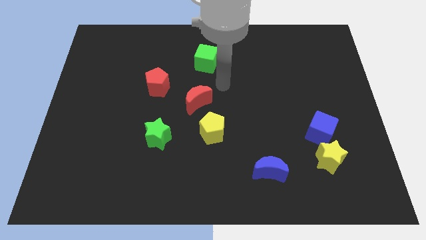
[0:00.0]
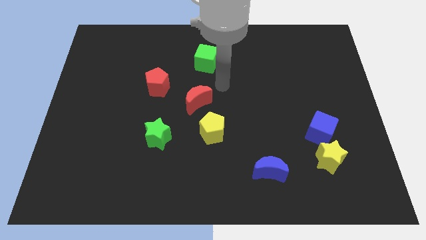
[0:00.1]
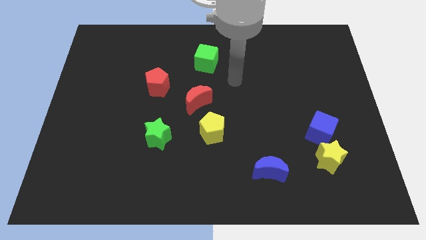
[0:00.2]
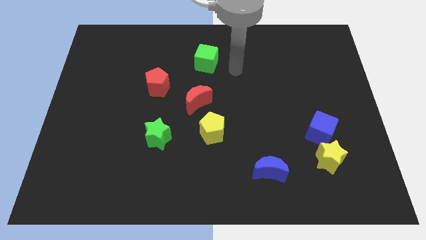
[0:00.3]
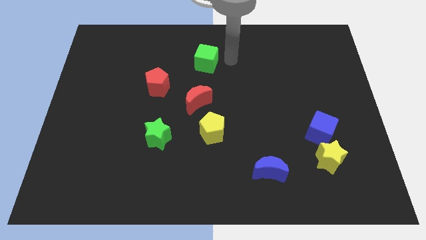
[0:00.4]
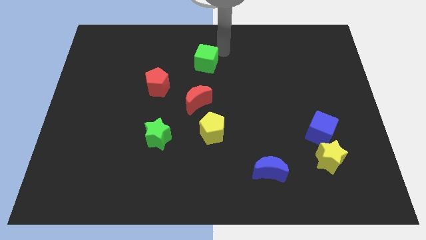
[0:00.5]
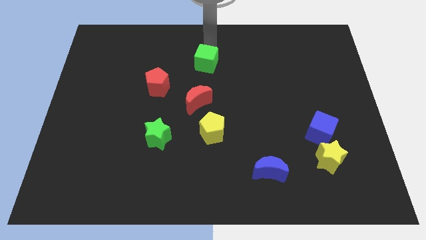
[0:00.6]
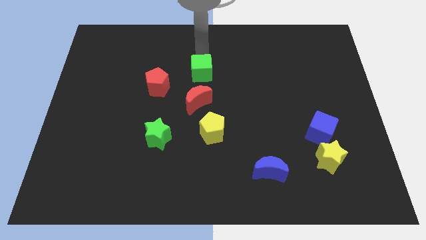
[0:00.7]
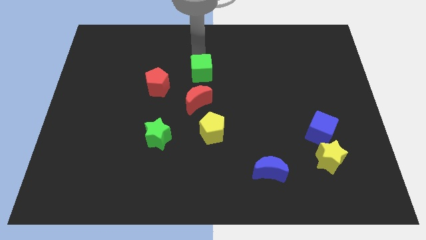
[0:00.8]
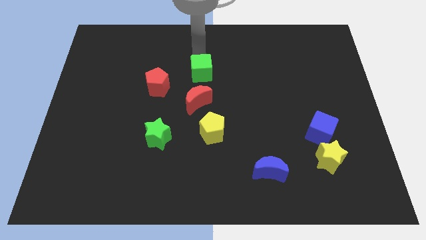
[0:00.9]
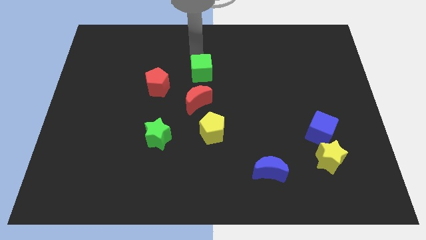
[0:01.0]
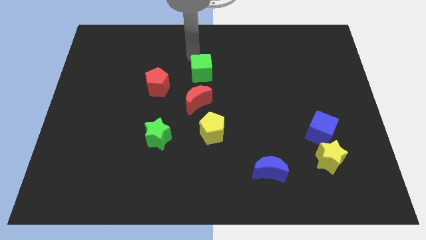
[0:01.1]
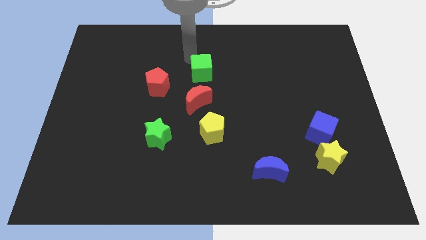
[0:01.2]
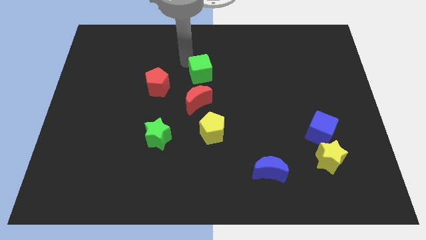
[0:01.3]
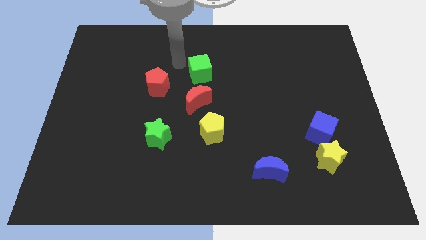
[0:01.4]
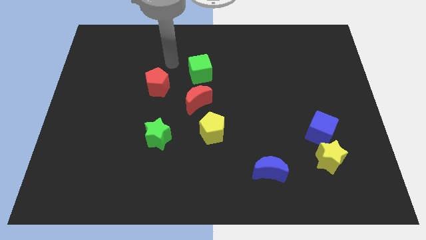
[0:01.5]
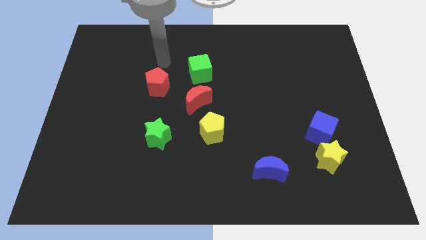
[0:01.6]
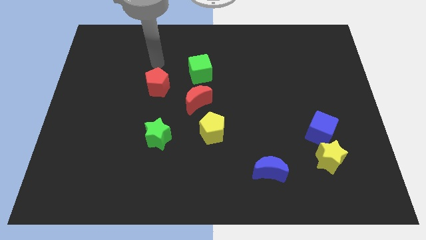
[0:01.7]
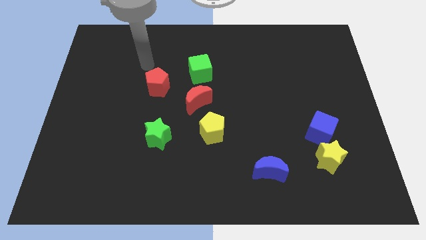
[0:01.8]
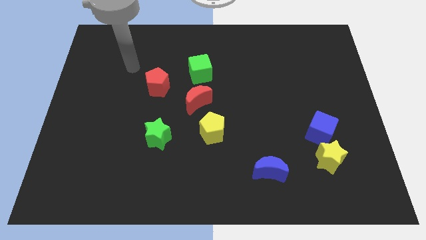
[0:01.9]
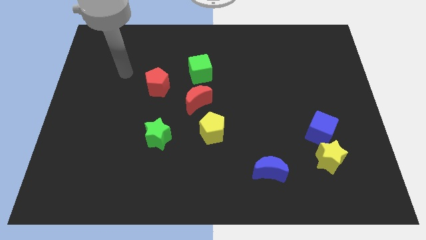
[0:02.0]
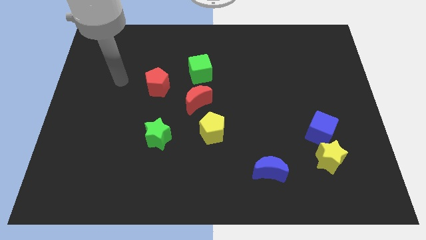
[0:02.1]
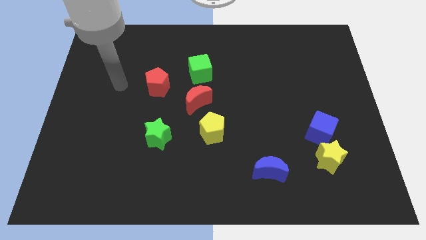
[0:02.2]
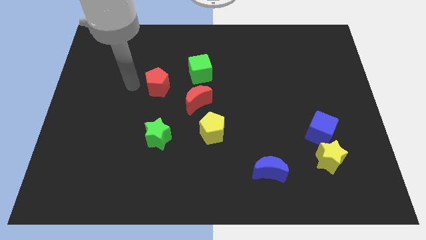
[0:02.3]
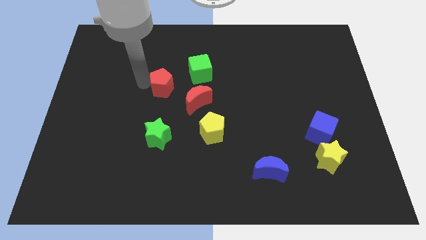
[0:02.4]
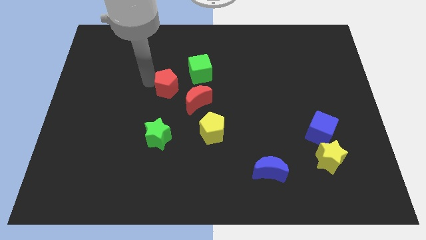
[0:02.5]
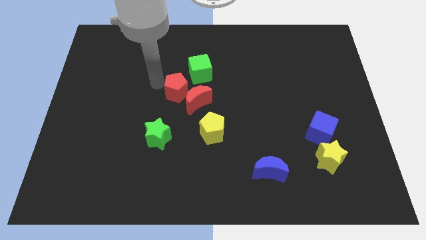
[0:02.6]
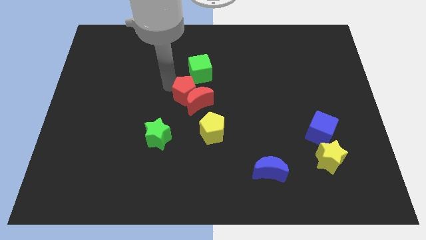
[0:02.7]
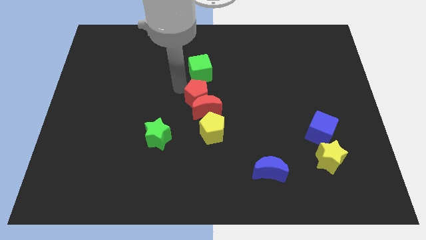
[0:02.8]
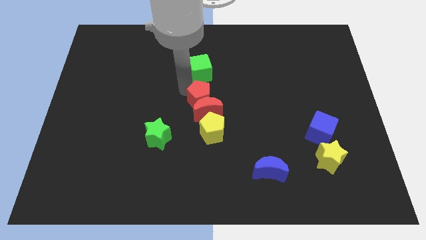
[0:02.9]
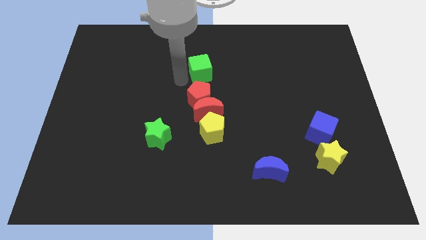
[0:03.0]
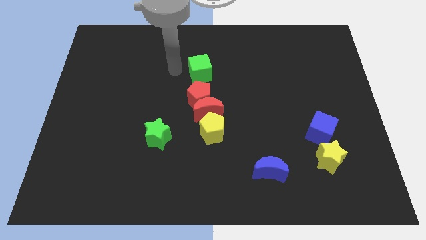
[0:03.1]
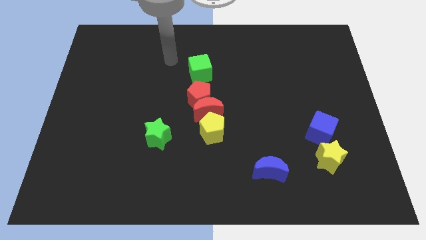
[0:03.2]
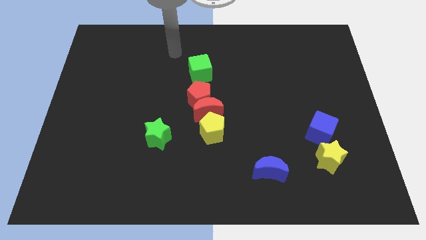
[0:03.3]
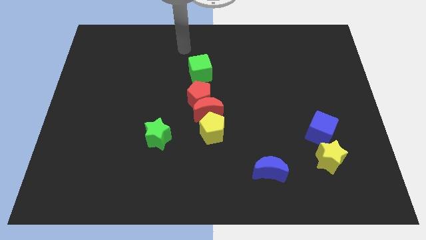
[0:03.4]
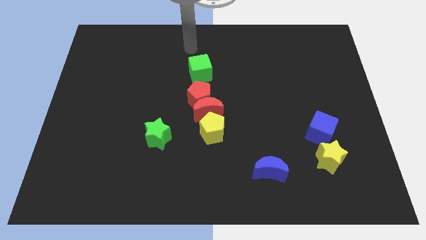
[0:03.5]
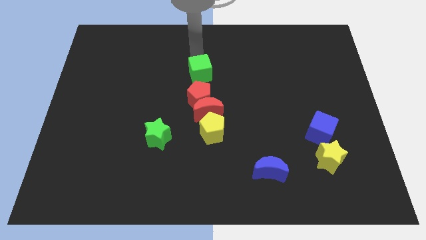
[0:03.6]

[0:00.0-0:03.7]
move the red pentagon close to the red crescent

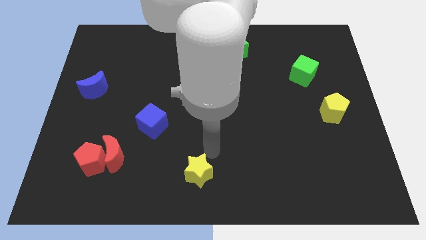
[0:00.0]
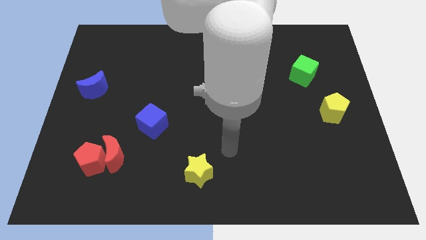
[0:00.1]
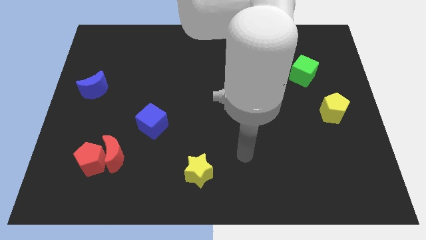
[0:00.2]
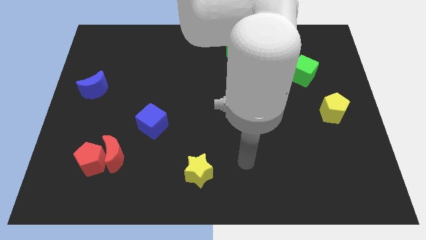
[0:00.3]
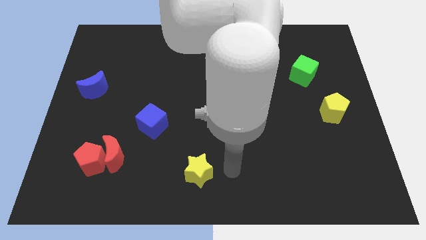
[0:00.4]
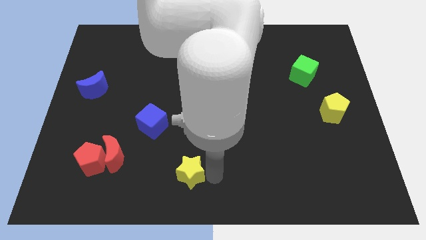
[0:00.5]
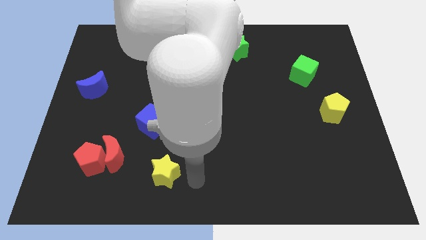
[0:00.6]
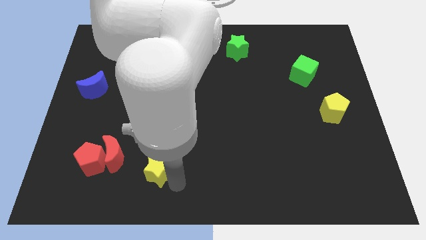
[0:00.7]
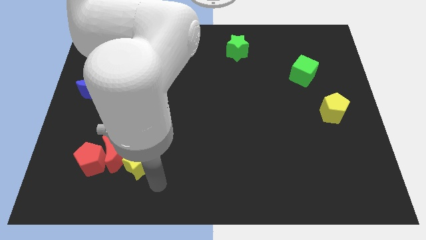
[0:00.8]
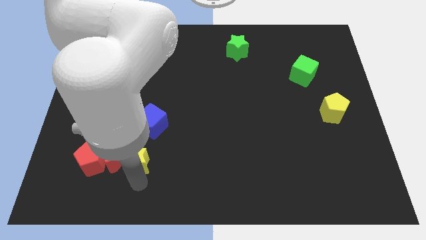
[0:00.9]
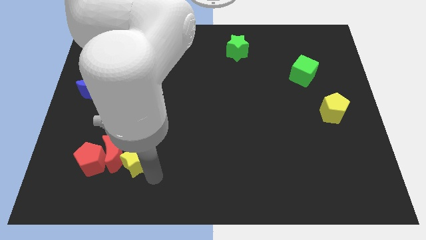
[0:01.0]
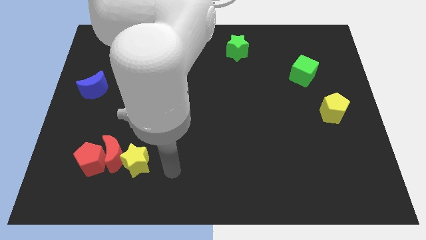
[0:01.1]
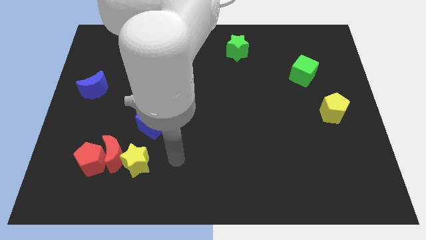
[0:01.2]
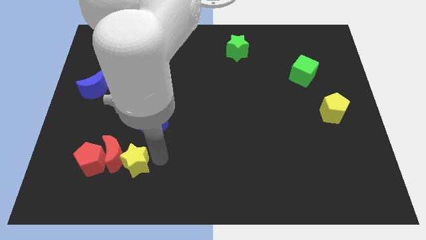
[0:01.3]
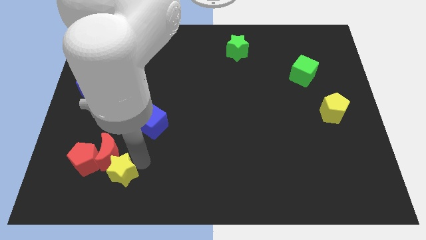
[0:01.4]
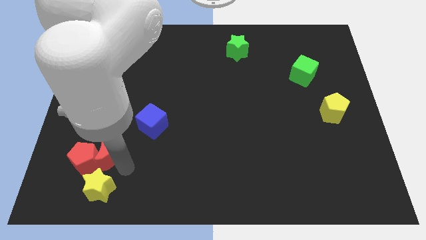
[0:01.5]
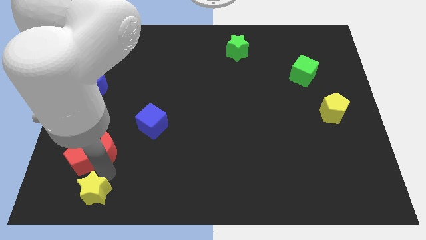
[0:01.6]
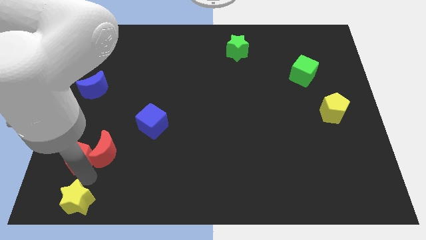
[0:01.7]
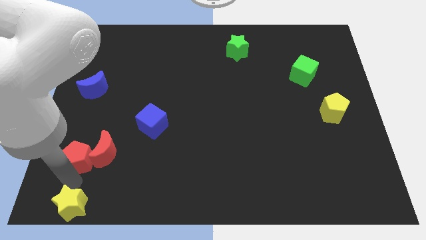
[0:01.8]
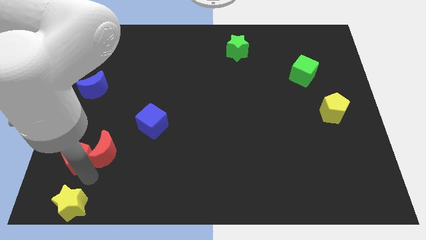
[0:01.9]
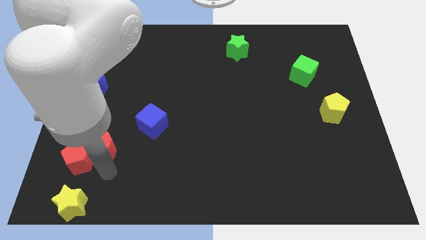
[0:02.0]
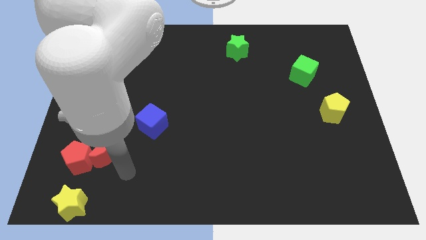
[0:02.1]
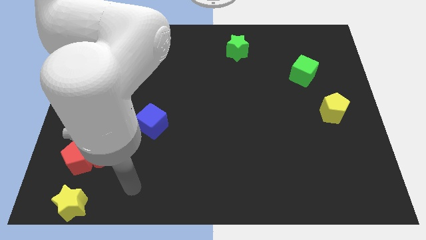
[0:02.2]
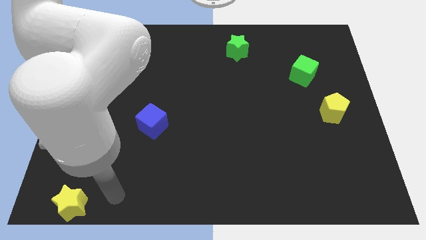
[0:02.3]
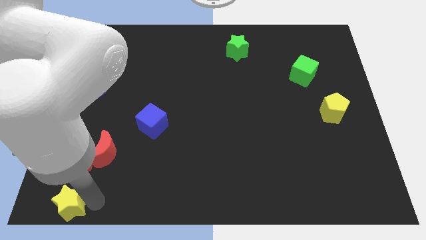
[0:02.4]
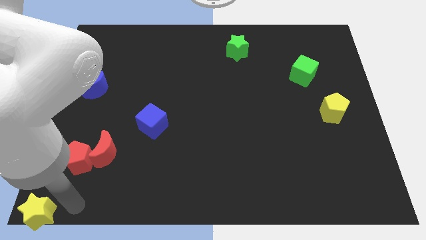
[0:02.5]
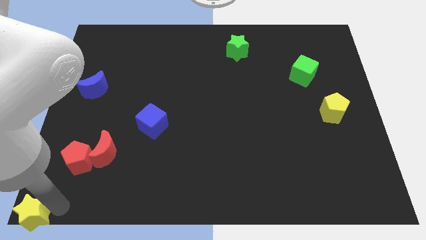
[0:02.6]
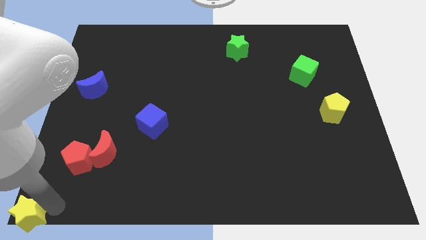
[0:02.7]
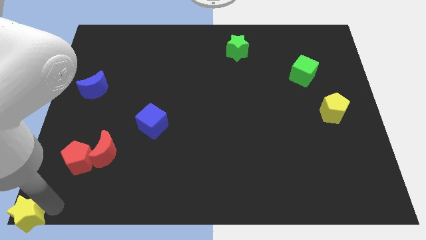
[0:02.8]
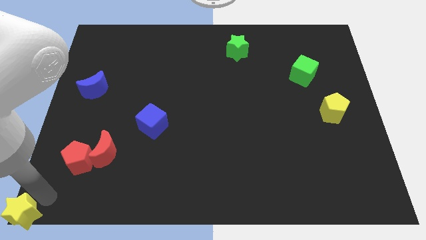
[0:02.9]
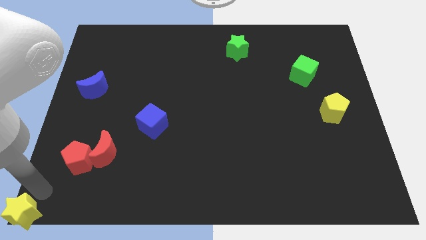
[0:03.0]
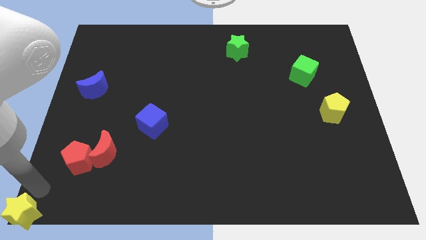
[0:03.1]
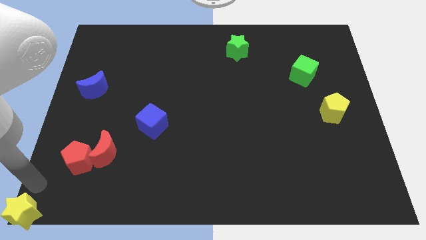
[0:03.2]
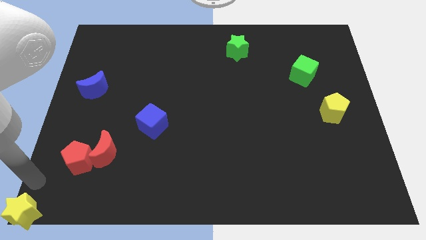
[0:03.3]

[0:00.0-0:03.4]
place the yellow star at the bottom left corner of the board

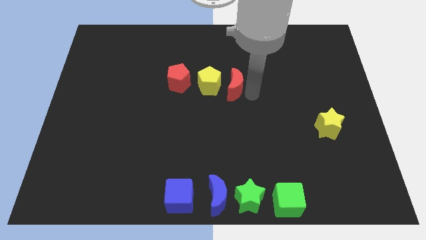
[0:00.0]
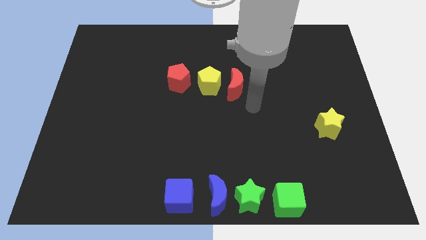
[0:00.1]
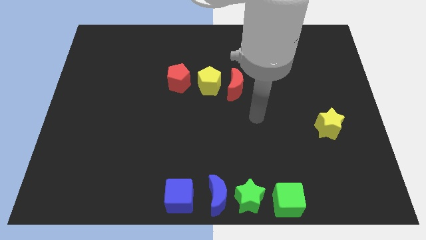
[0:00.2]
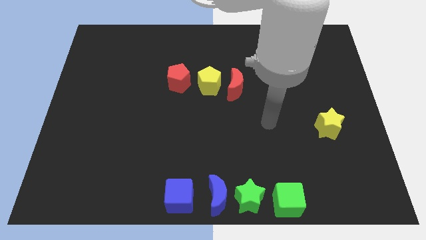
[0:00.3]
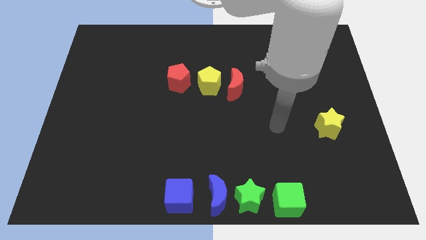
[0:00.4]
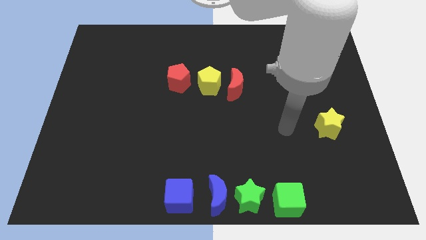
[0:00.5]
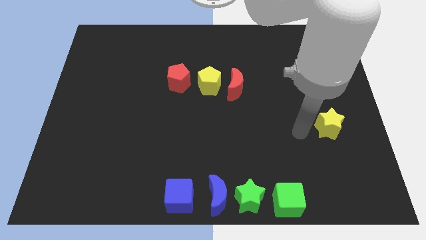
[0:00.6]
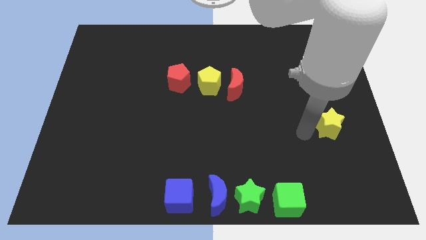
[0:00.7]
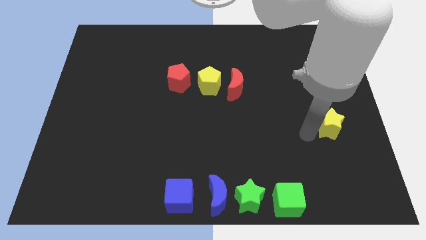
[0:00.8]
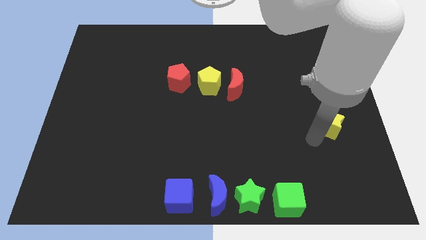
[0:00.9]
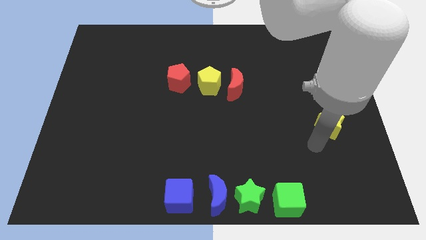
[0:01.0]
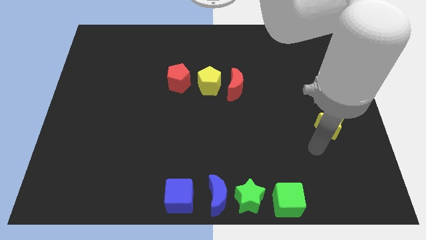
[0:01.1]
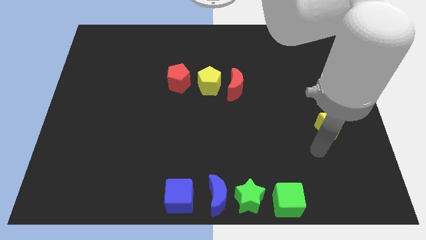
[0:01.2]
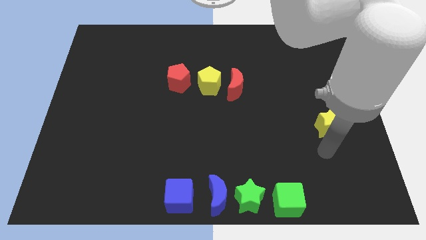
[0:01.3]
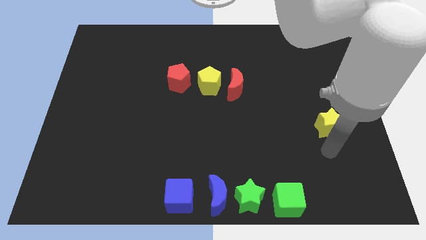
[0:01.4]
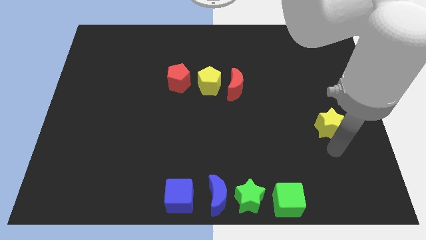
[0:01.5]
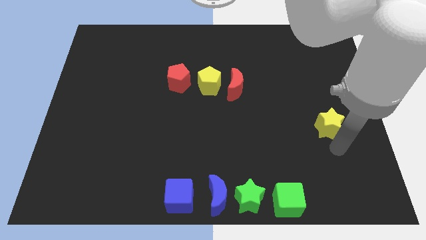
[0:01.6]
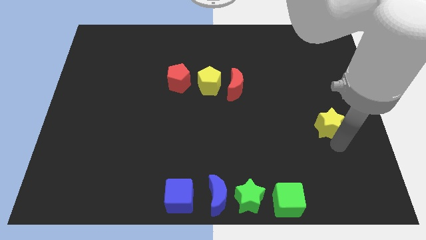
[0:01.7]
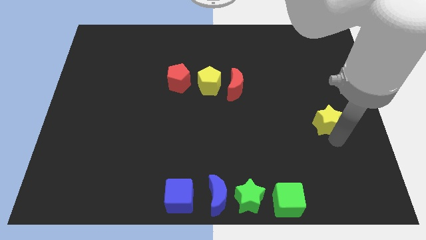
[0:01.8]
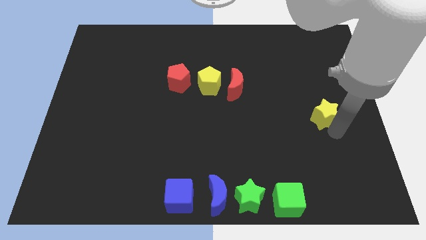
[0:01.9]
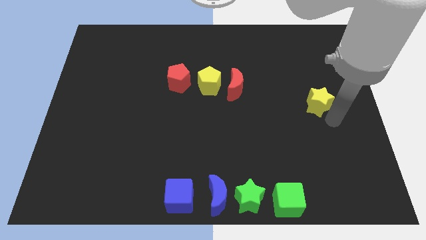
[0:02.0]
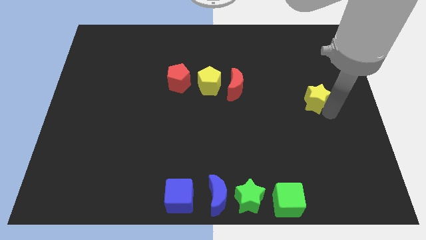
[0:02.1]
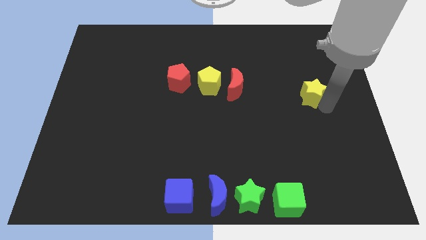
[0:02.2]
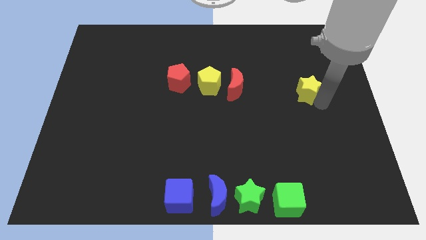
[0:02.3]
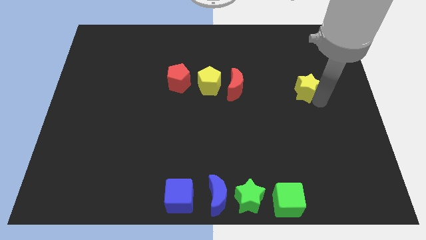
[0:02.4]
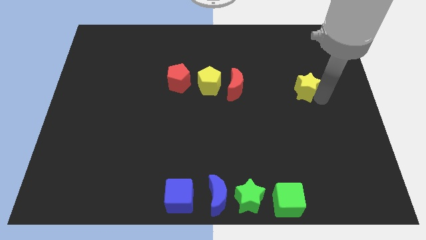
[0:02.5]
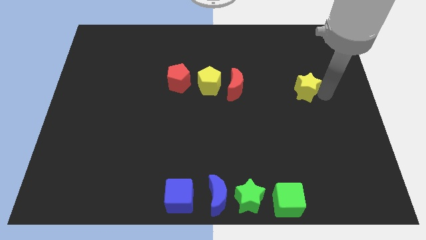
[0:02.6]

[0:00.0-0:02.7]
move the yellow star upwards
